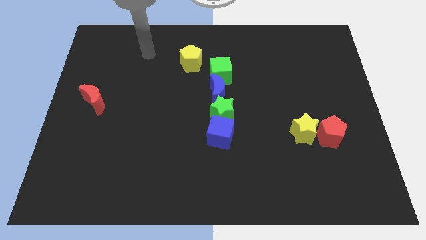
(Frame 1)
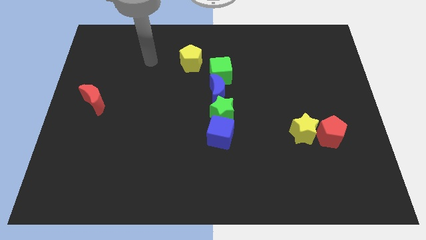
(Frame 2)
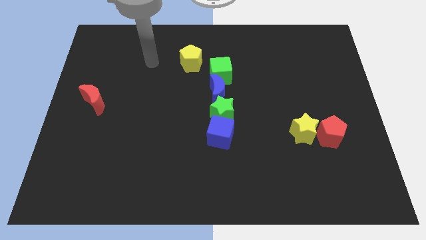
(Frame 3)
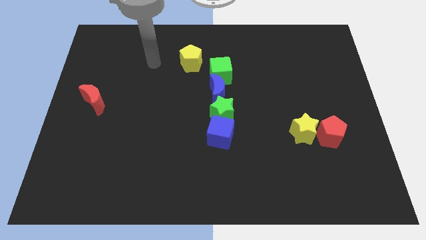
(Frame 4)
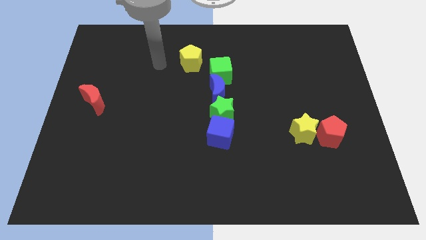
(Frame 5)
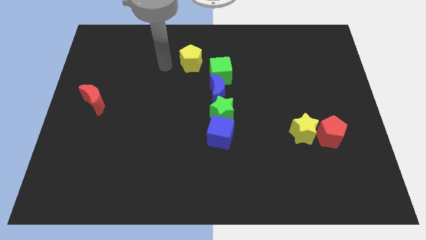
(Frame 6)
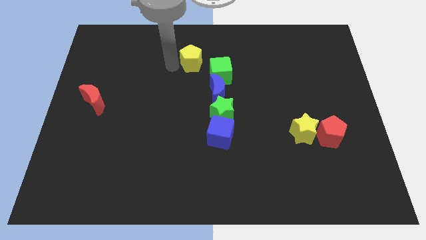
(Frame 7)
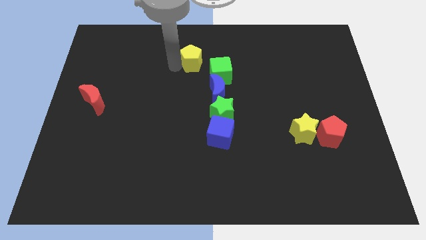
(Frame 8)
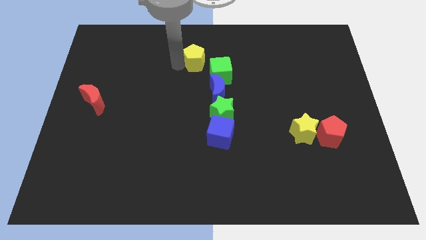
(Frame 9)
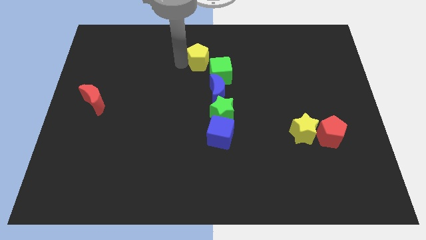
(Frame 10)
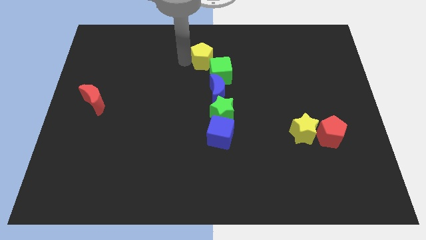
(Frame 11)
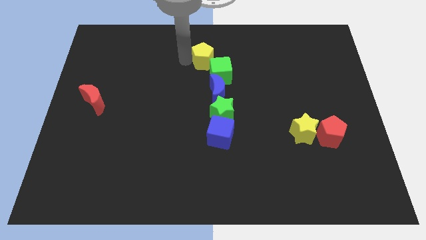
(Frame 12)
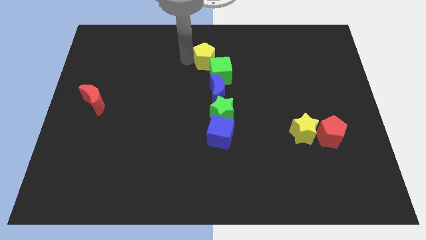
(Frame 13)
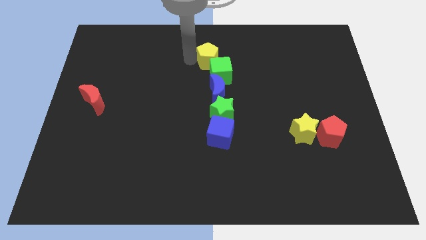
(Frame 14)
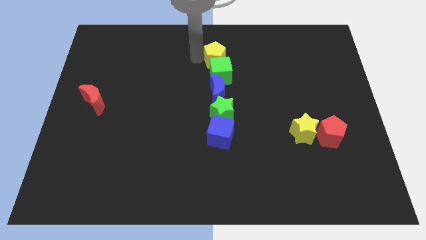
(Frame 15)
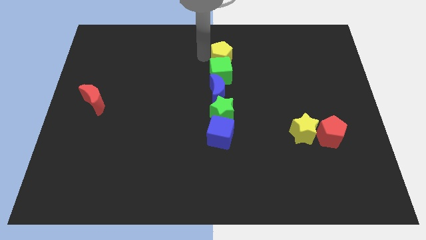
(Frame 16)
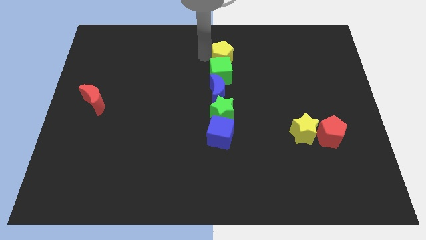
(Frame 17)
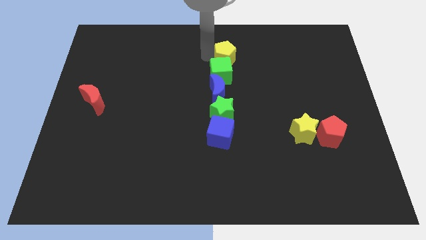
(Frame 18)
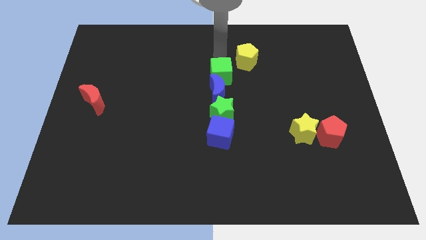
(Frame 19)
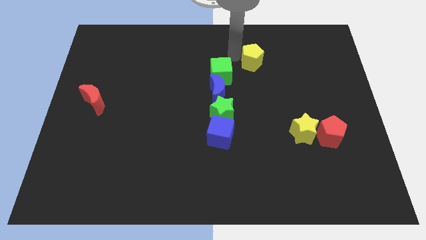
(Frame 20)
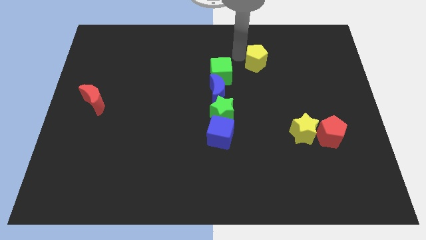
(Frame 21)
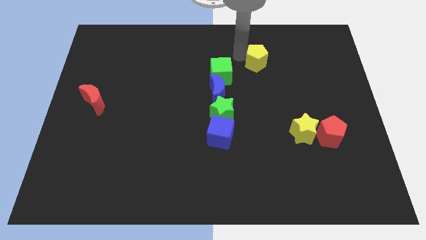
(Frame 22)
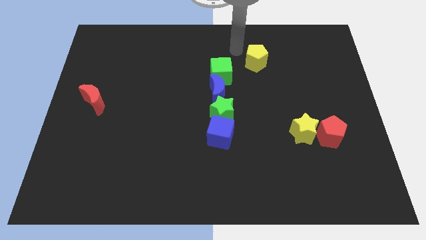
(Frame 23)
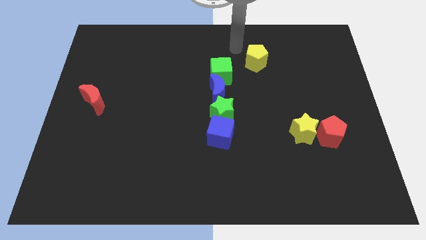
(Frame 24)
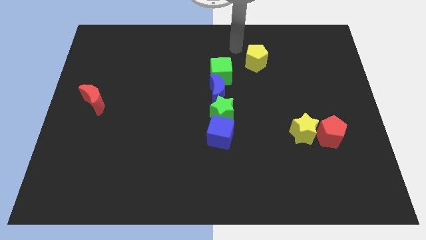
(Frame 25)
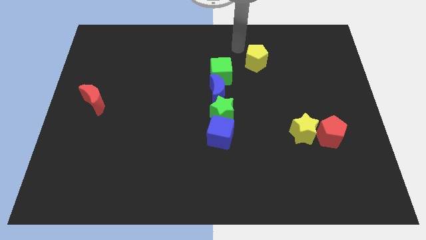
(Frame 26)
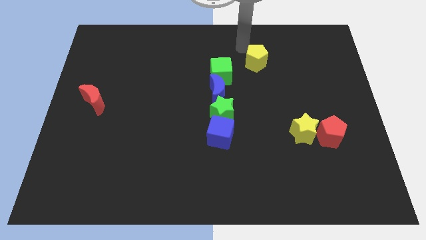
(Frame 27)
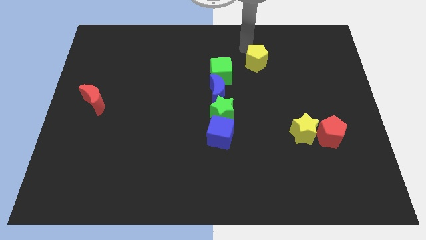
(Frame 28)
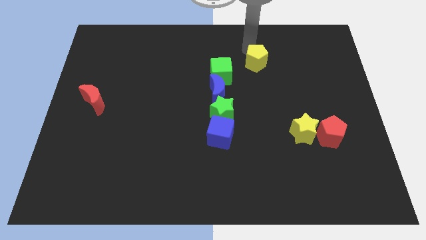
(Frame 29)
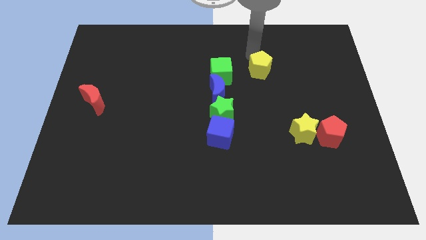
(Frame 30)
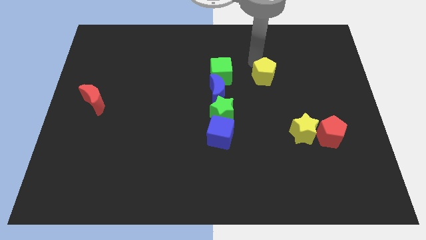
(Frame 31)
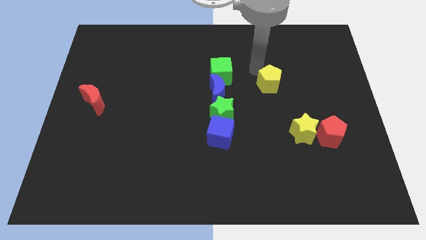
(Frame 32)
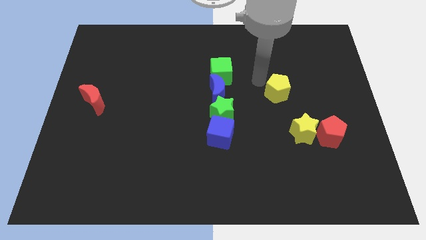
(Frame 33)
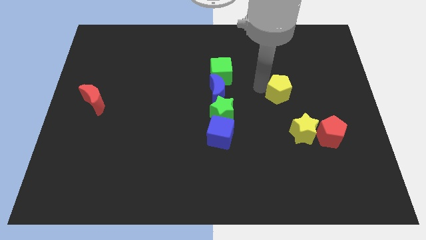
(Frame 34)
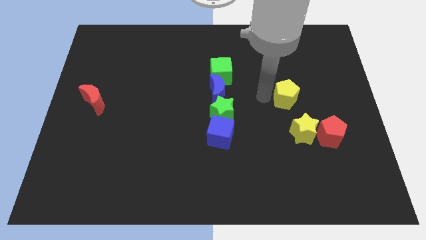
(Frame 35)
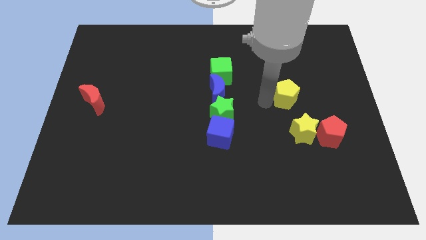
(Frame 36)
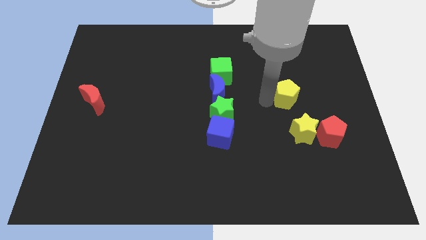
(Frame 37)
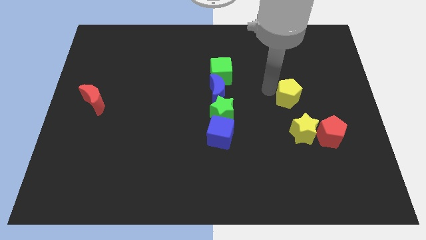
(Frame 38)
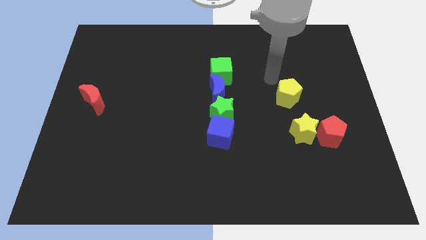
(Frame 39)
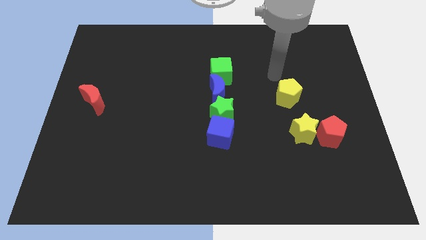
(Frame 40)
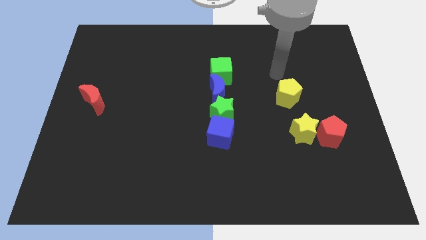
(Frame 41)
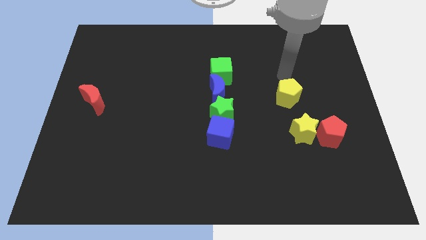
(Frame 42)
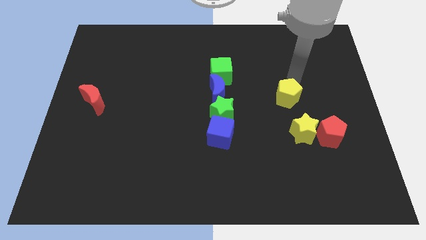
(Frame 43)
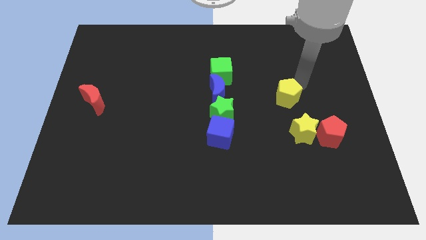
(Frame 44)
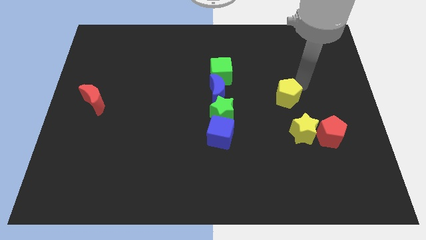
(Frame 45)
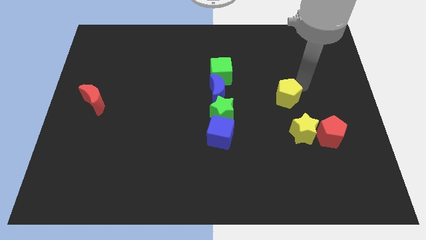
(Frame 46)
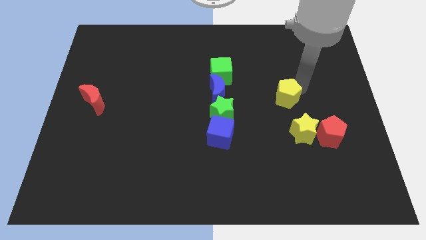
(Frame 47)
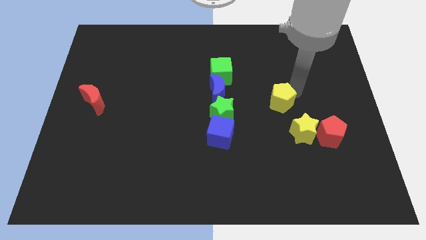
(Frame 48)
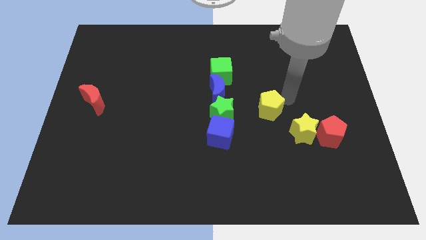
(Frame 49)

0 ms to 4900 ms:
push yellow pentagon

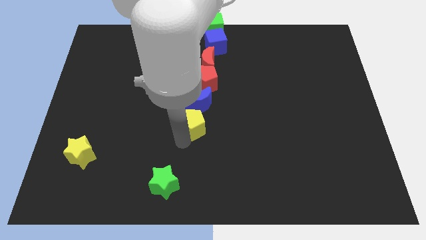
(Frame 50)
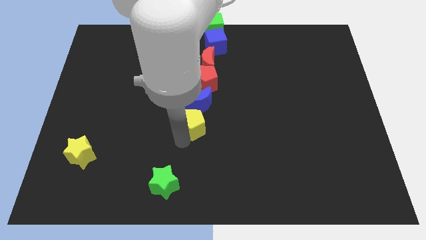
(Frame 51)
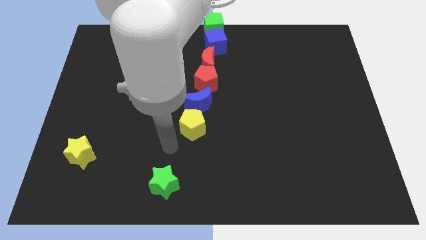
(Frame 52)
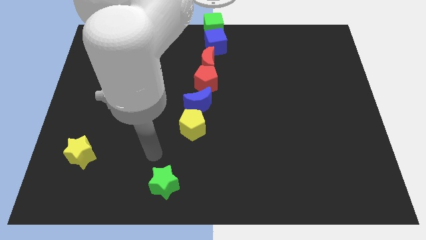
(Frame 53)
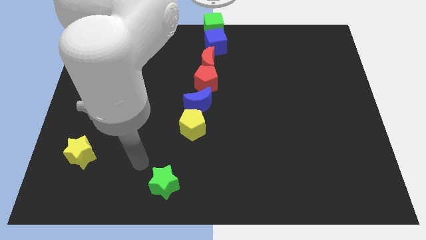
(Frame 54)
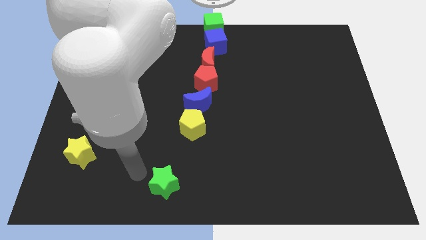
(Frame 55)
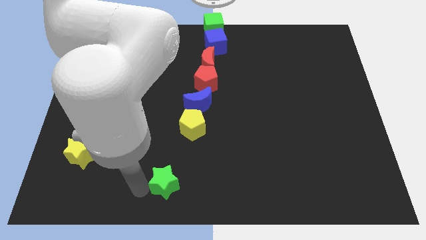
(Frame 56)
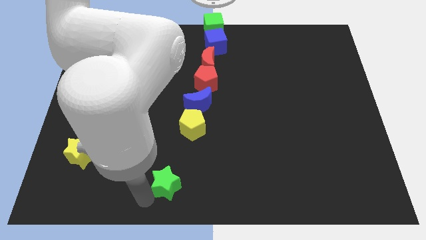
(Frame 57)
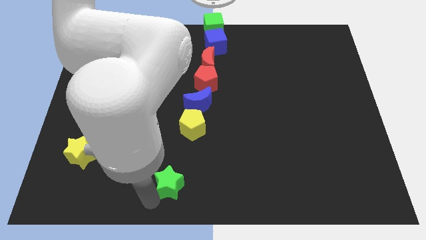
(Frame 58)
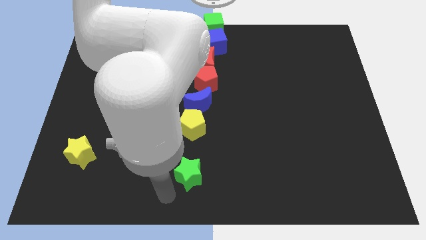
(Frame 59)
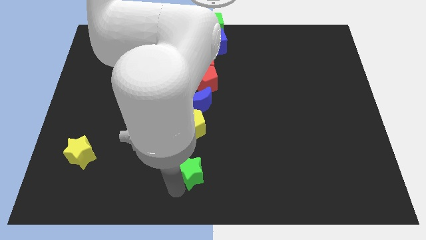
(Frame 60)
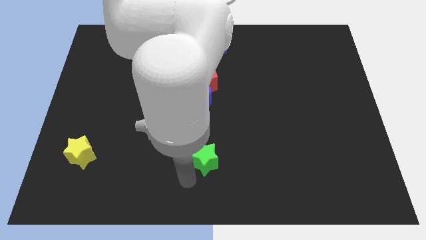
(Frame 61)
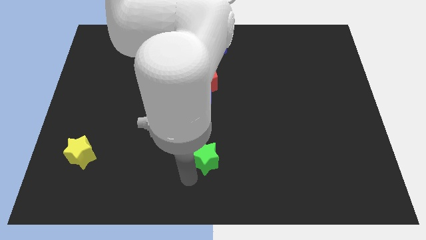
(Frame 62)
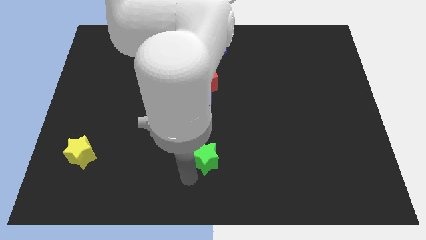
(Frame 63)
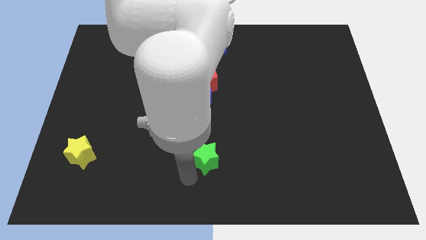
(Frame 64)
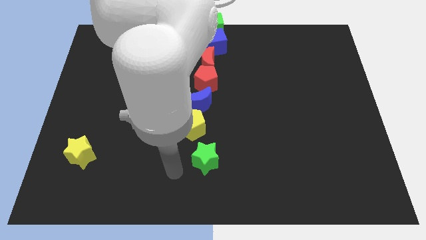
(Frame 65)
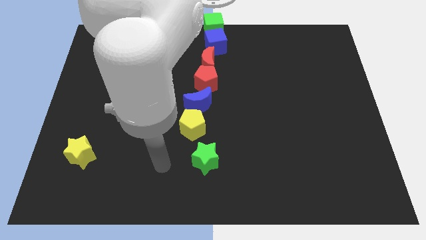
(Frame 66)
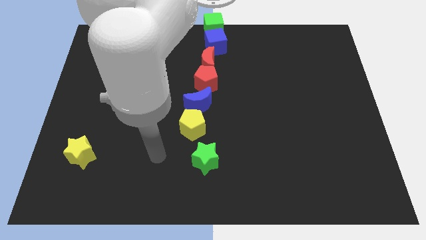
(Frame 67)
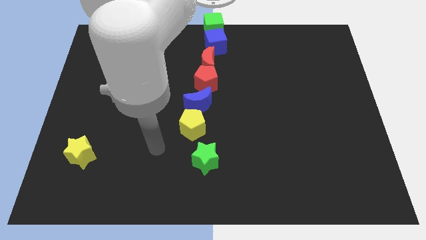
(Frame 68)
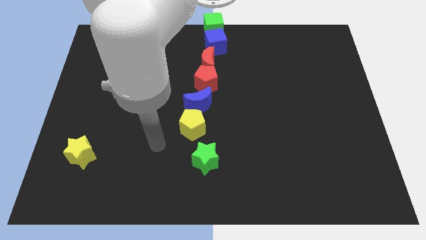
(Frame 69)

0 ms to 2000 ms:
move the green star towards top

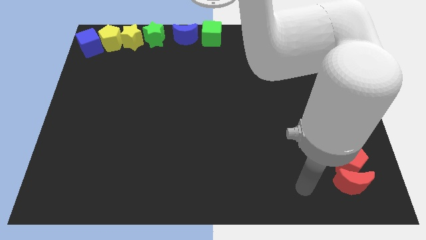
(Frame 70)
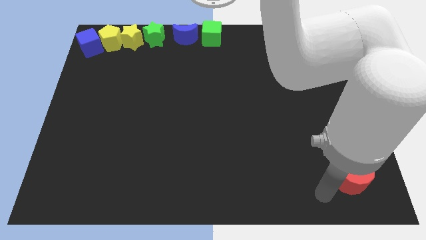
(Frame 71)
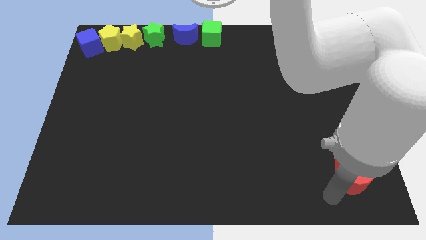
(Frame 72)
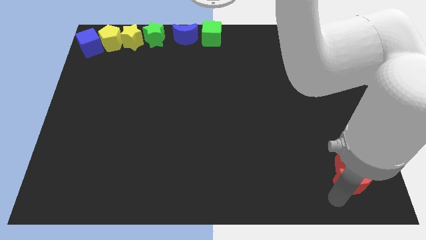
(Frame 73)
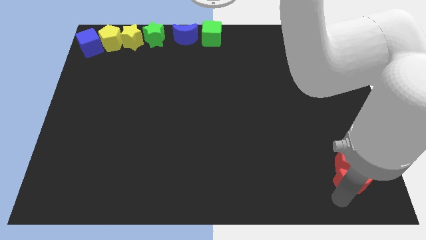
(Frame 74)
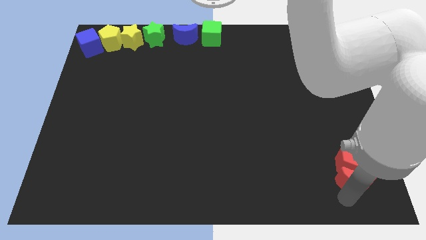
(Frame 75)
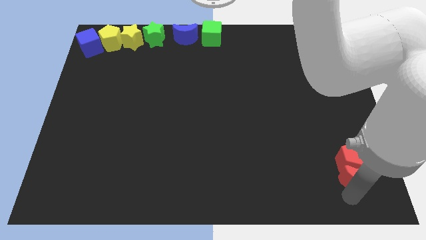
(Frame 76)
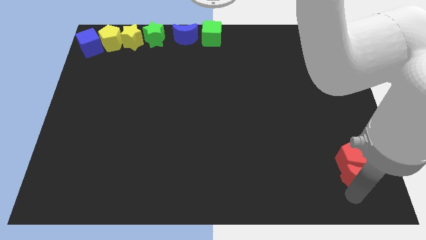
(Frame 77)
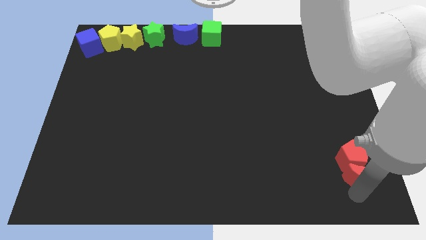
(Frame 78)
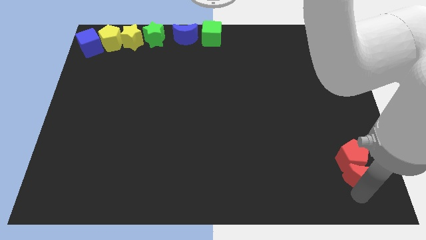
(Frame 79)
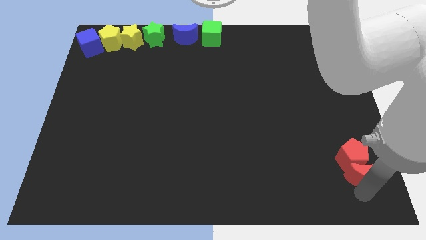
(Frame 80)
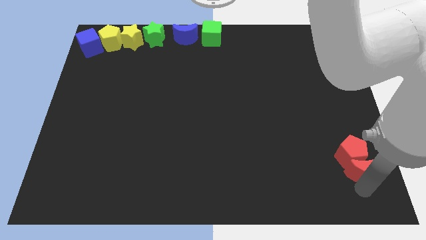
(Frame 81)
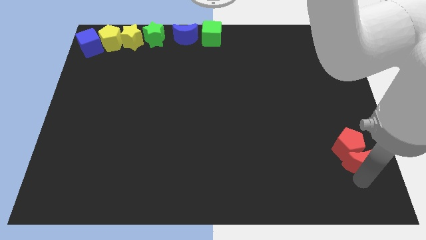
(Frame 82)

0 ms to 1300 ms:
push the red moon into the red pentagon

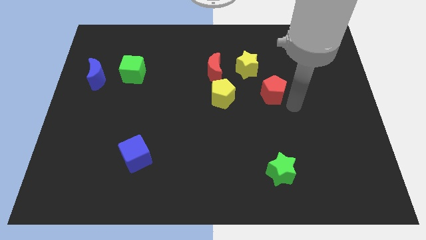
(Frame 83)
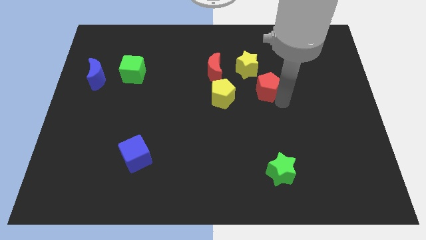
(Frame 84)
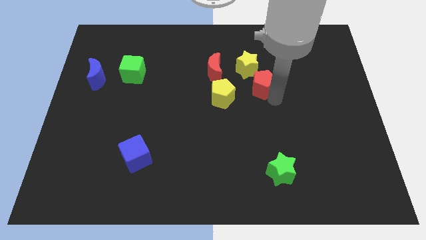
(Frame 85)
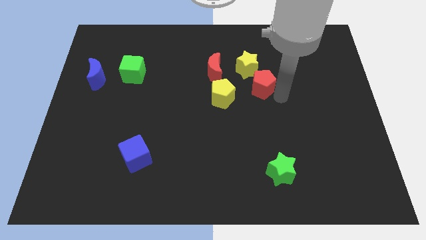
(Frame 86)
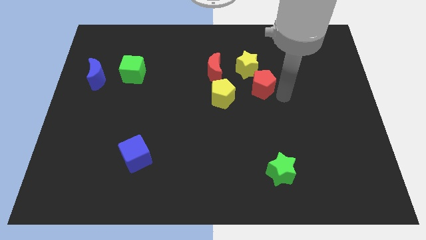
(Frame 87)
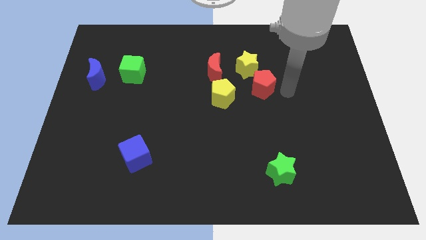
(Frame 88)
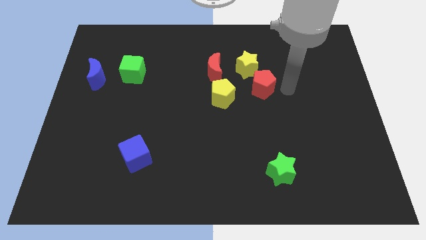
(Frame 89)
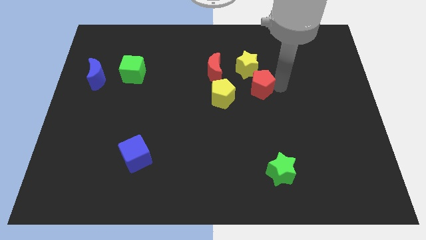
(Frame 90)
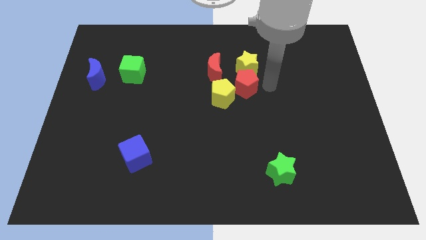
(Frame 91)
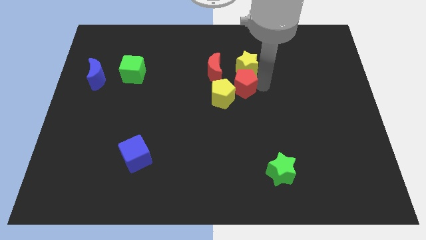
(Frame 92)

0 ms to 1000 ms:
push the red pentagon to the bottom of the yellow star
